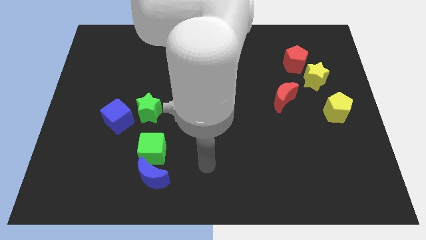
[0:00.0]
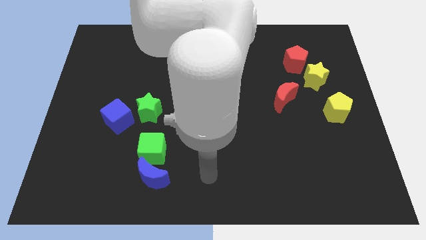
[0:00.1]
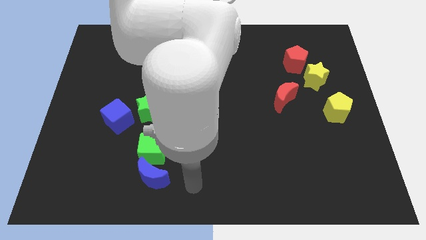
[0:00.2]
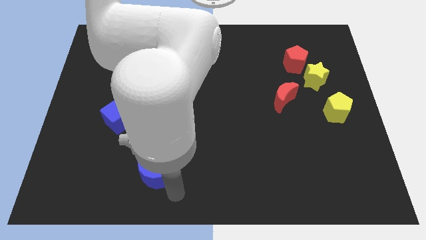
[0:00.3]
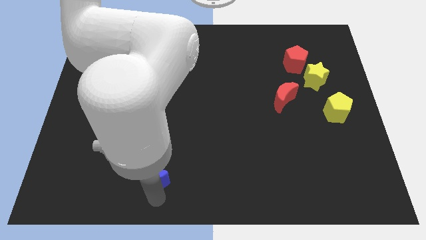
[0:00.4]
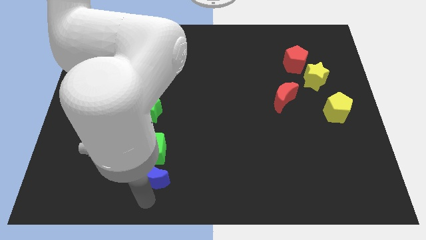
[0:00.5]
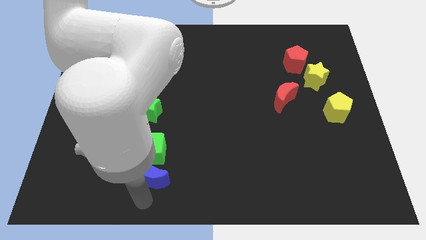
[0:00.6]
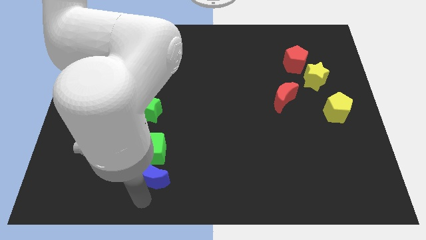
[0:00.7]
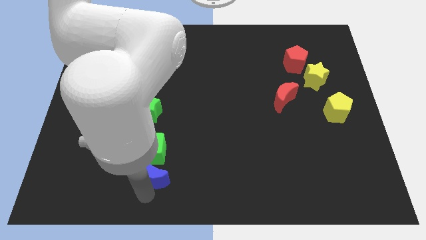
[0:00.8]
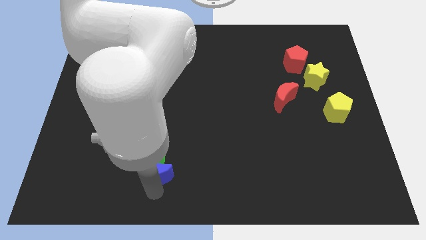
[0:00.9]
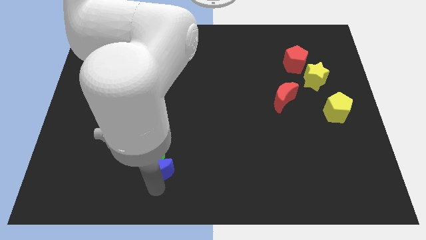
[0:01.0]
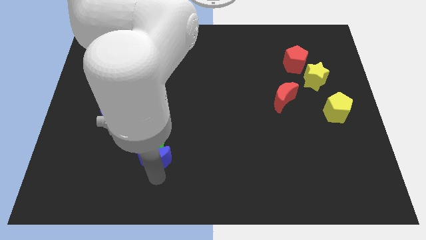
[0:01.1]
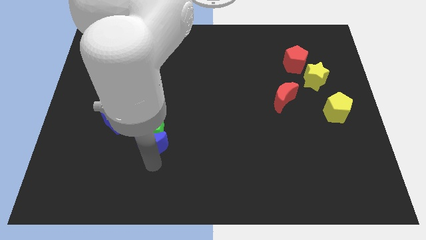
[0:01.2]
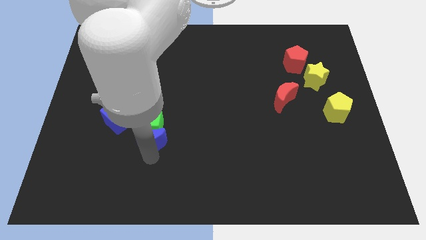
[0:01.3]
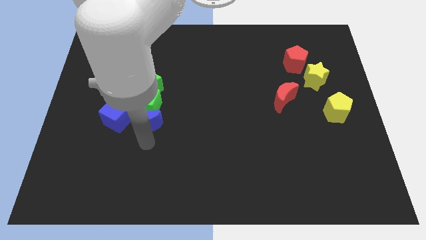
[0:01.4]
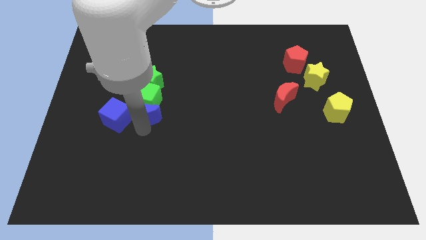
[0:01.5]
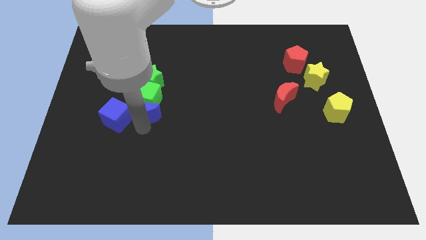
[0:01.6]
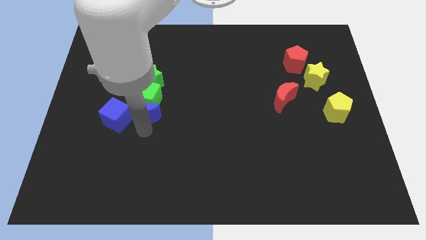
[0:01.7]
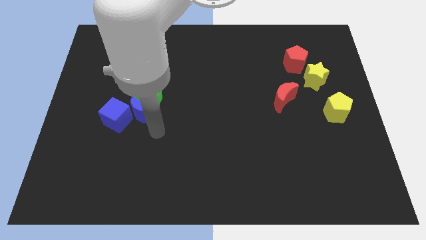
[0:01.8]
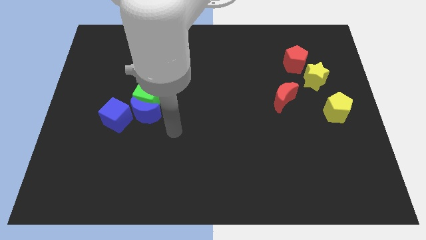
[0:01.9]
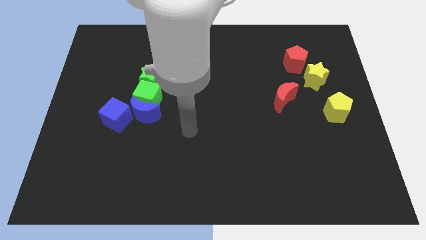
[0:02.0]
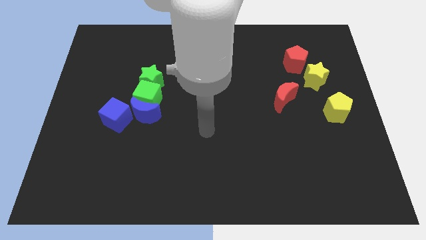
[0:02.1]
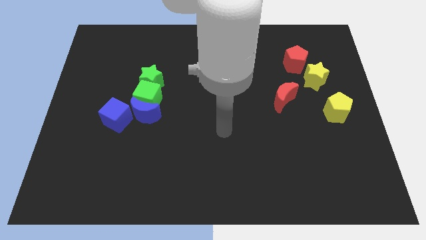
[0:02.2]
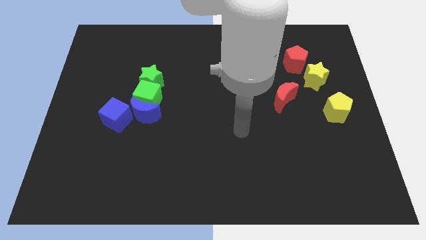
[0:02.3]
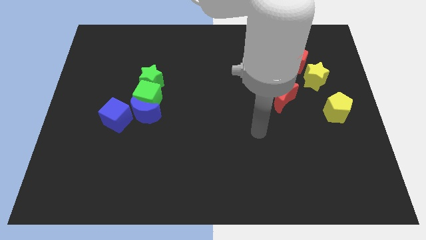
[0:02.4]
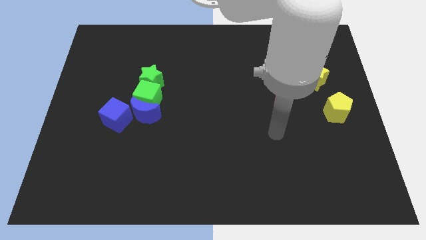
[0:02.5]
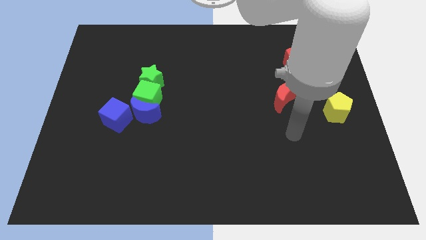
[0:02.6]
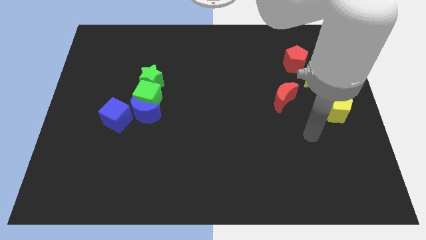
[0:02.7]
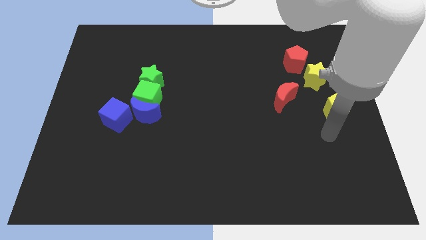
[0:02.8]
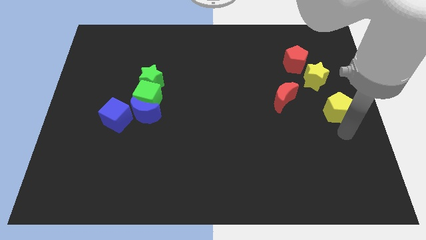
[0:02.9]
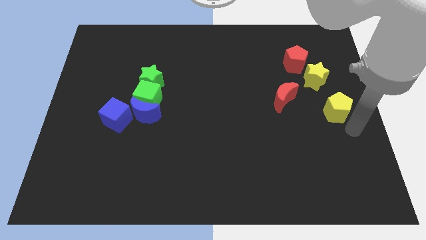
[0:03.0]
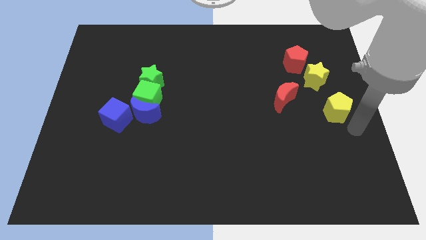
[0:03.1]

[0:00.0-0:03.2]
push the blue moon into the green cube

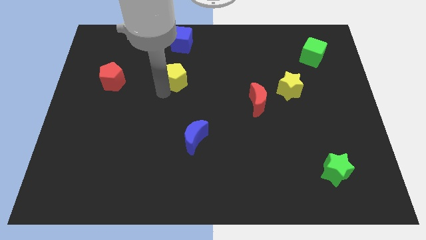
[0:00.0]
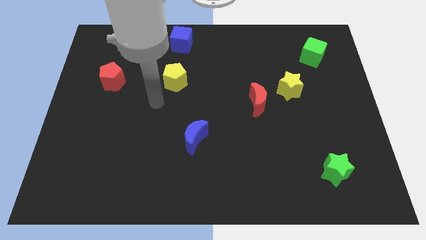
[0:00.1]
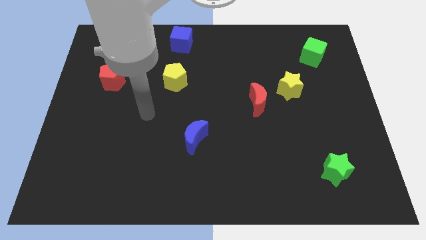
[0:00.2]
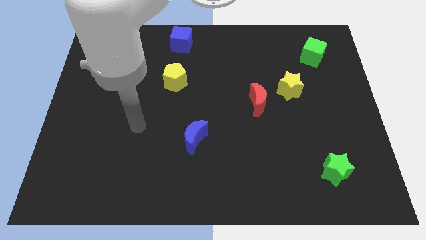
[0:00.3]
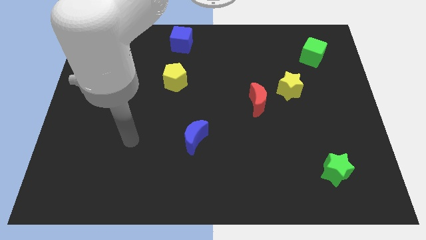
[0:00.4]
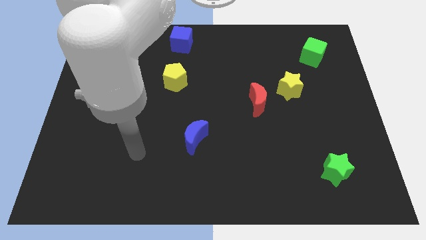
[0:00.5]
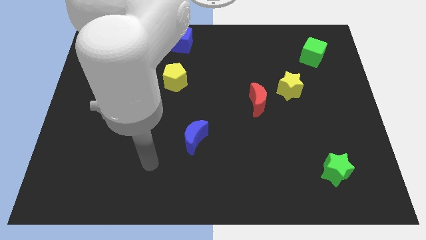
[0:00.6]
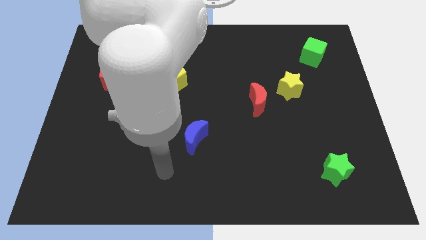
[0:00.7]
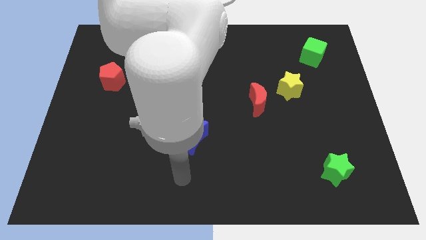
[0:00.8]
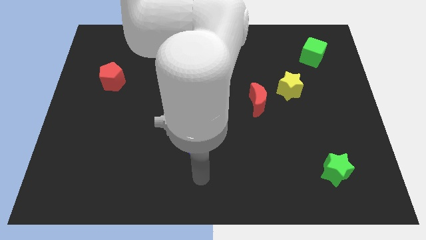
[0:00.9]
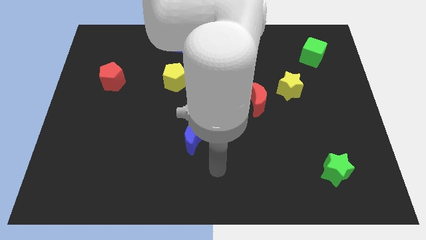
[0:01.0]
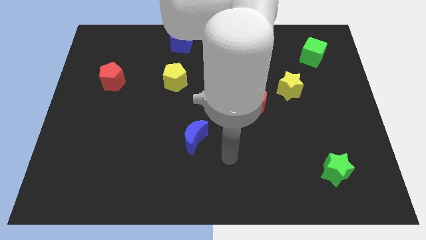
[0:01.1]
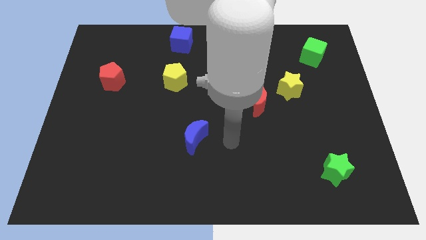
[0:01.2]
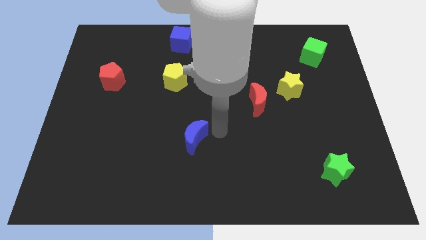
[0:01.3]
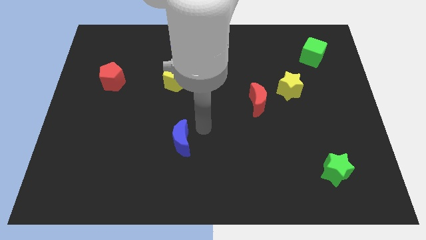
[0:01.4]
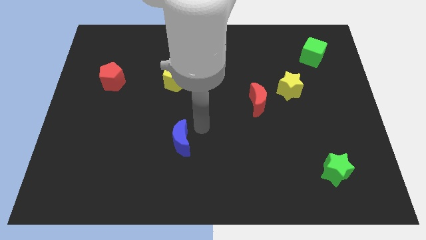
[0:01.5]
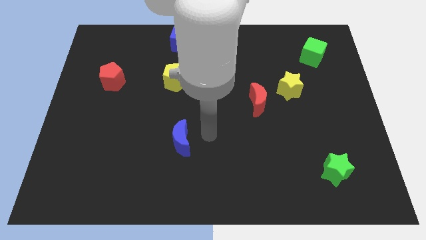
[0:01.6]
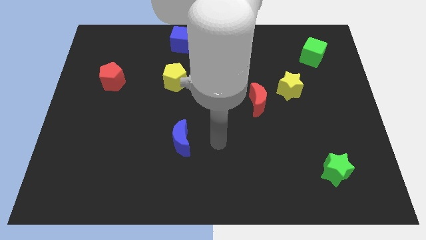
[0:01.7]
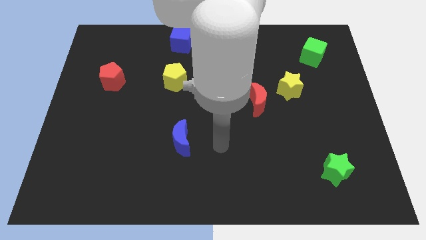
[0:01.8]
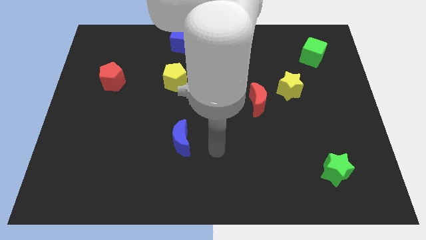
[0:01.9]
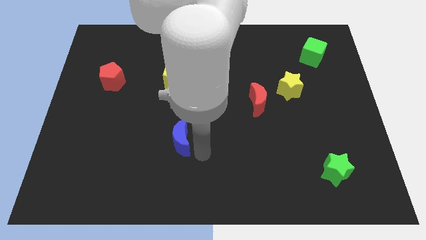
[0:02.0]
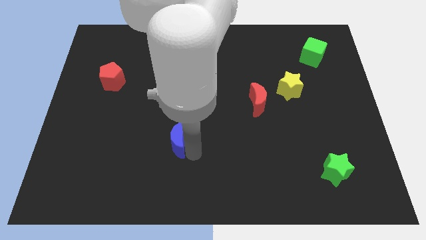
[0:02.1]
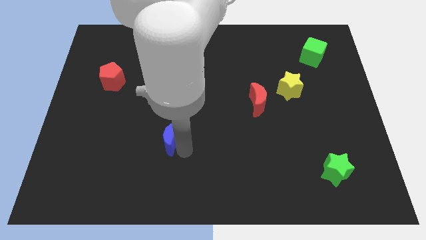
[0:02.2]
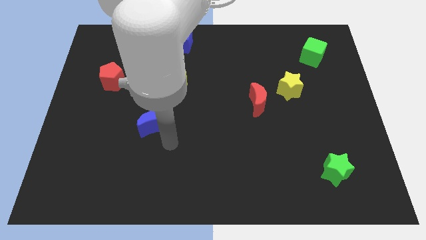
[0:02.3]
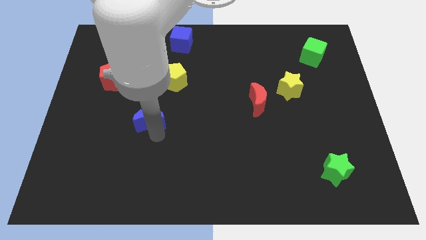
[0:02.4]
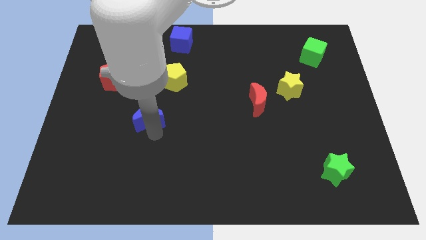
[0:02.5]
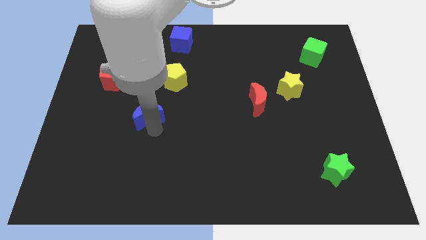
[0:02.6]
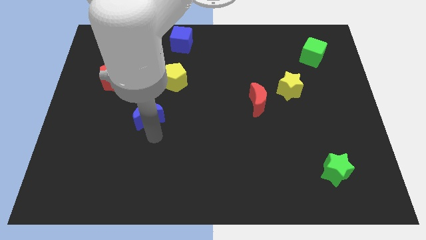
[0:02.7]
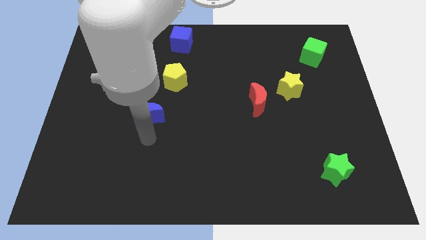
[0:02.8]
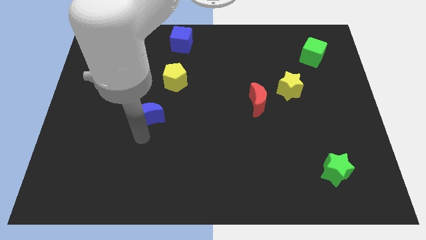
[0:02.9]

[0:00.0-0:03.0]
push the blue crescent towards the top side of the board

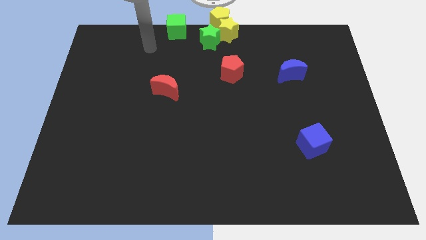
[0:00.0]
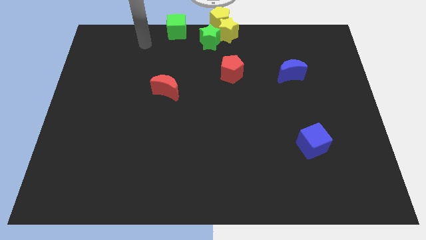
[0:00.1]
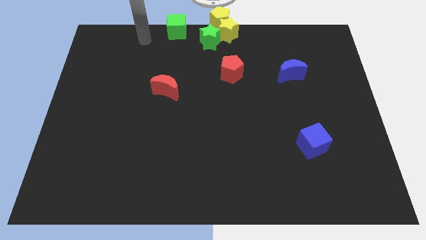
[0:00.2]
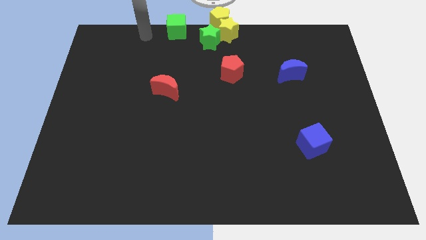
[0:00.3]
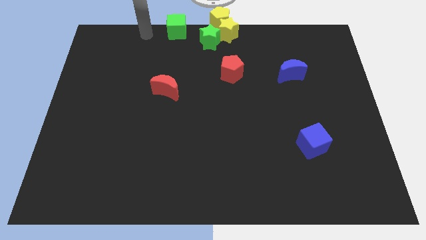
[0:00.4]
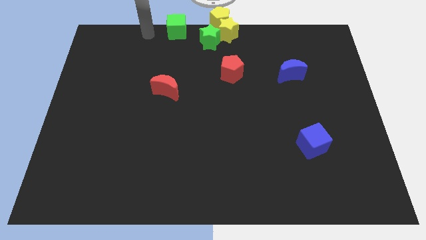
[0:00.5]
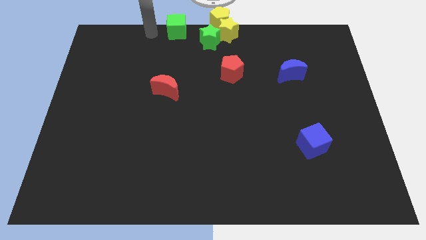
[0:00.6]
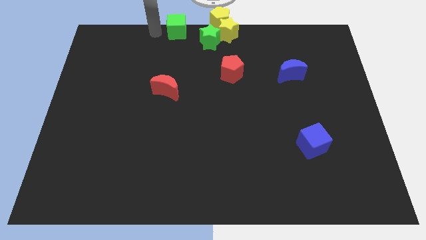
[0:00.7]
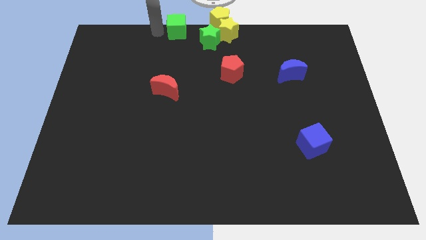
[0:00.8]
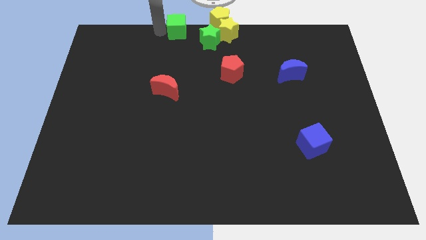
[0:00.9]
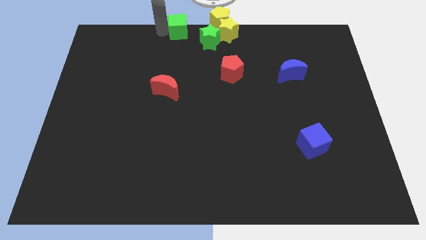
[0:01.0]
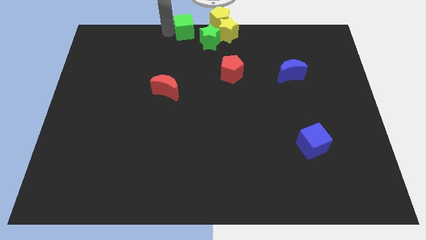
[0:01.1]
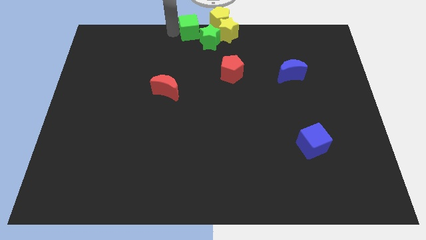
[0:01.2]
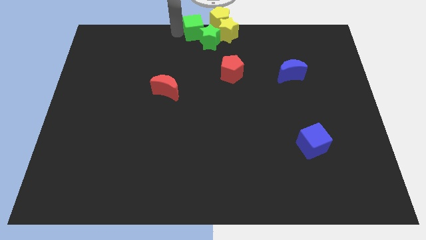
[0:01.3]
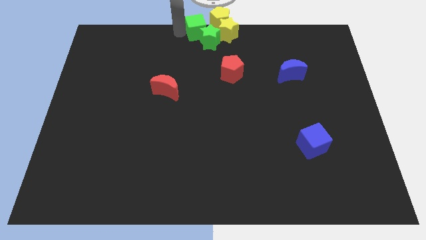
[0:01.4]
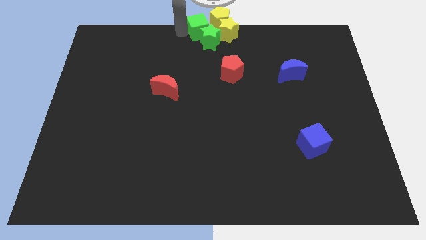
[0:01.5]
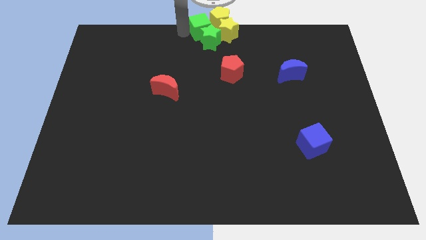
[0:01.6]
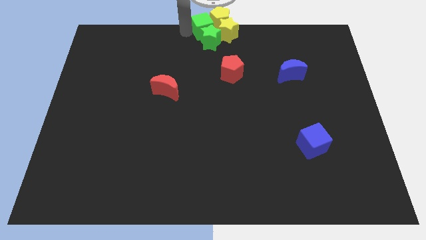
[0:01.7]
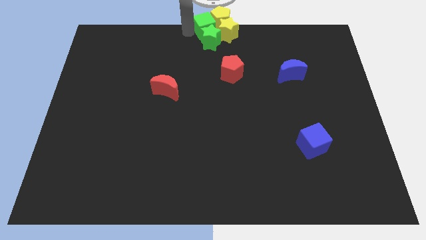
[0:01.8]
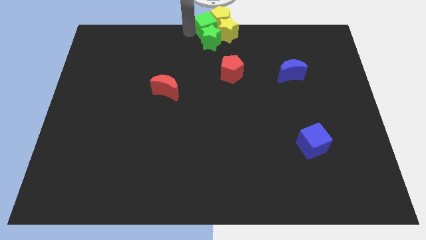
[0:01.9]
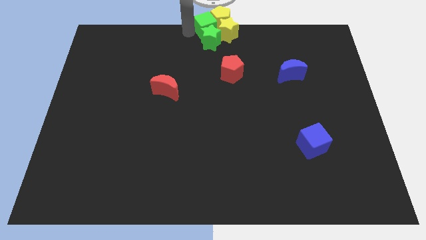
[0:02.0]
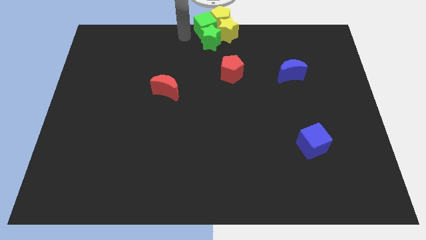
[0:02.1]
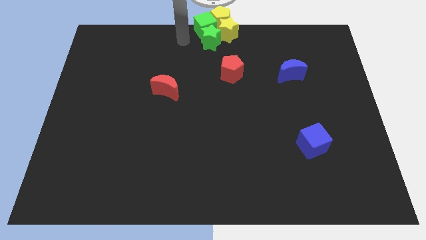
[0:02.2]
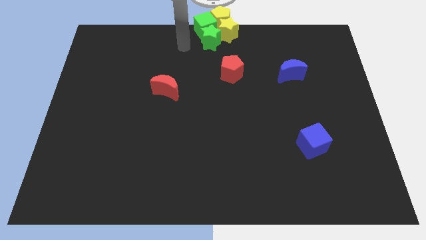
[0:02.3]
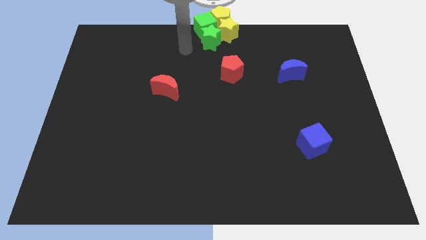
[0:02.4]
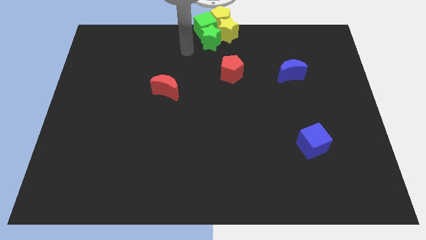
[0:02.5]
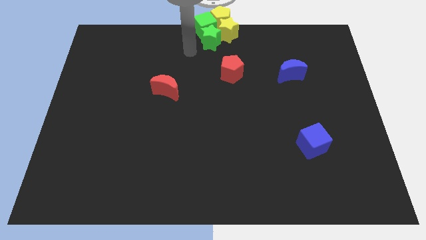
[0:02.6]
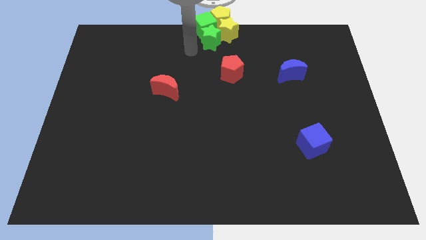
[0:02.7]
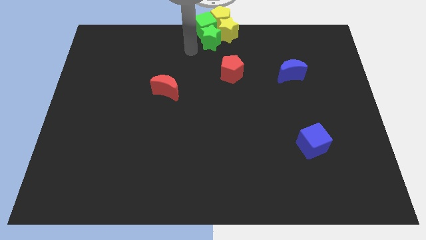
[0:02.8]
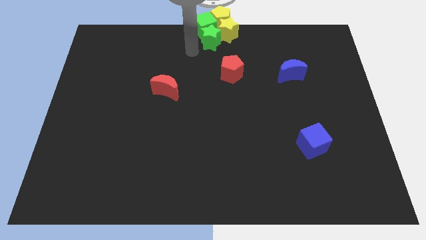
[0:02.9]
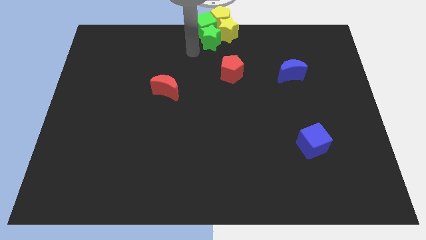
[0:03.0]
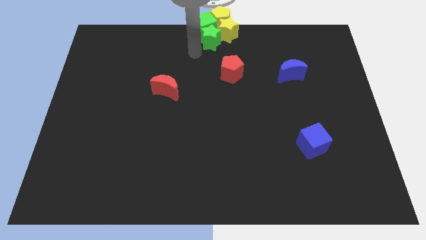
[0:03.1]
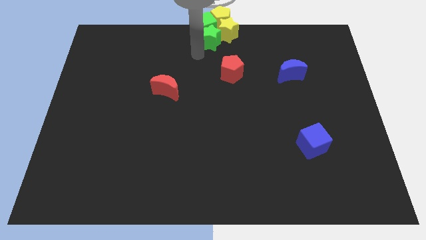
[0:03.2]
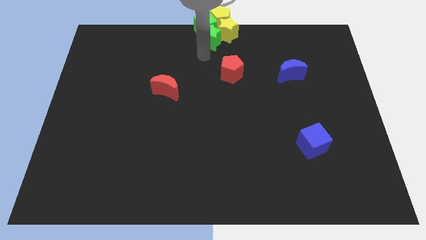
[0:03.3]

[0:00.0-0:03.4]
push green cube into yellow pentagon
